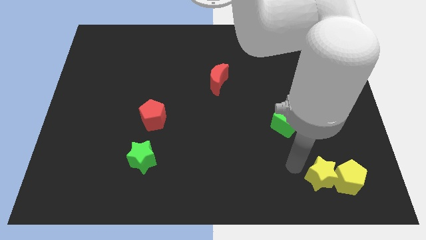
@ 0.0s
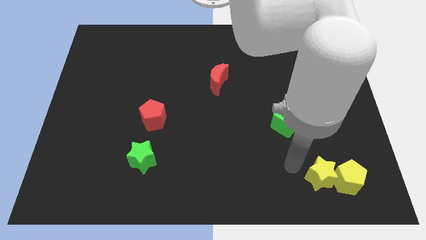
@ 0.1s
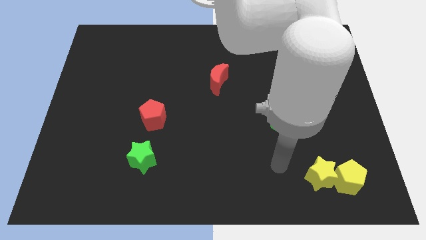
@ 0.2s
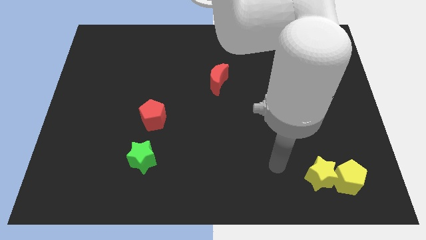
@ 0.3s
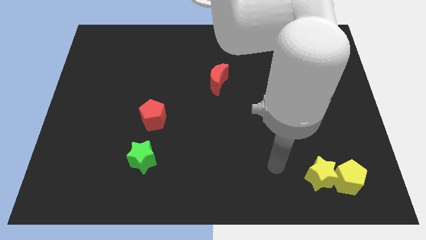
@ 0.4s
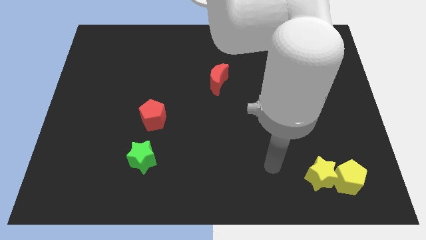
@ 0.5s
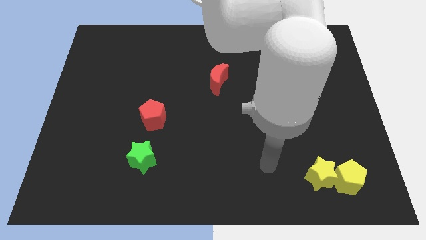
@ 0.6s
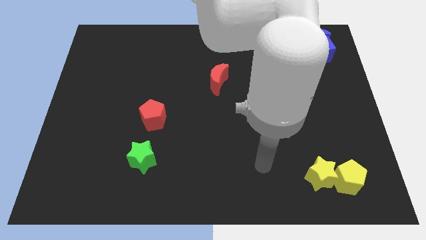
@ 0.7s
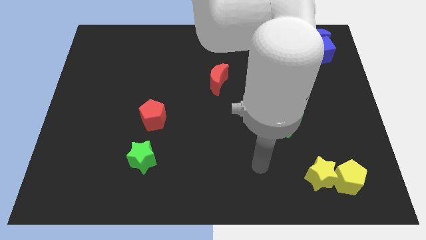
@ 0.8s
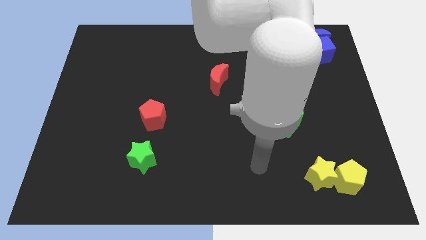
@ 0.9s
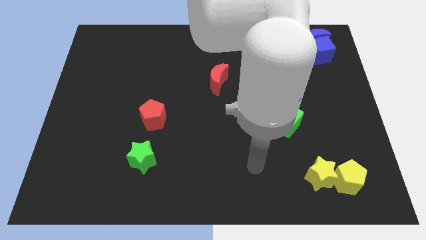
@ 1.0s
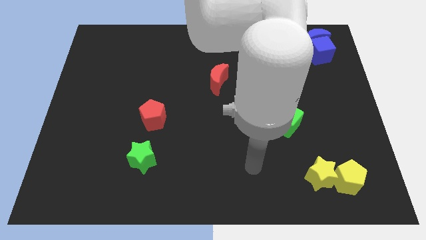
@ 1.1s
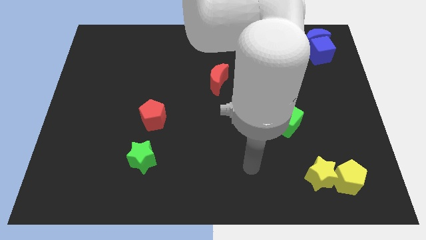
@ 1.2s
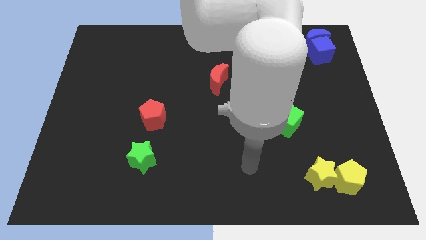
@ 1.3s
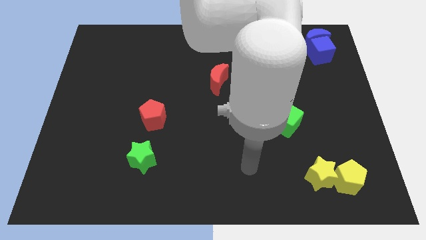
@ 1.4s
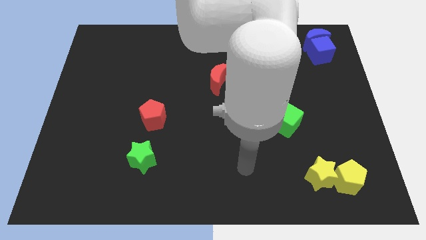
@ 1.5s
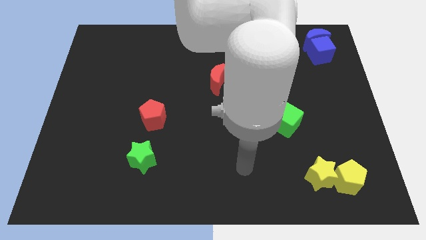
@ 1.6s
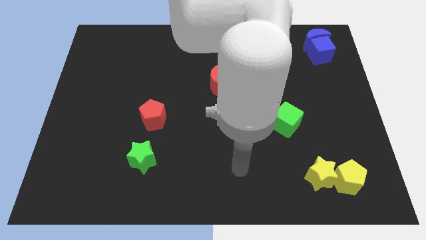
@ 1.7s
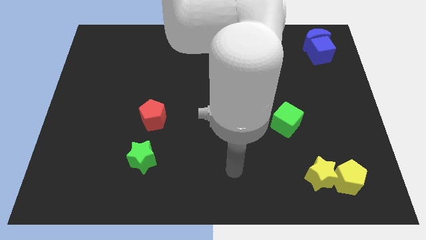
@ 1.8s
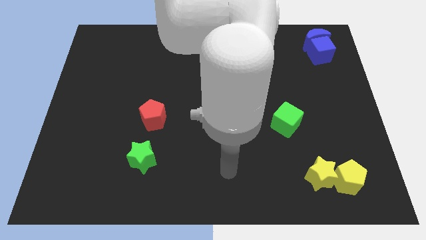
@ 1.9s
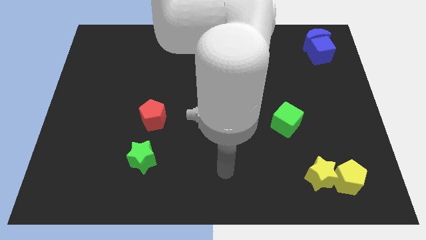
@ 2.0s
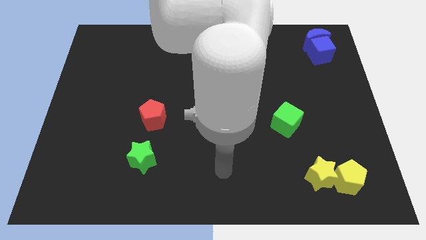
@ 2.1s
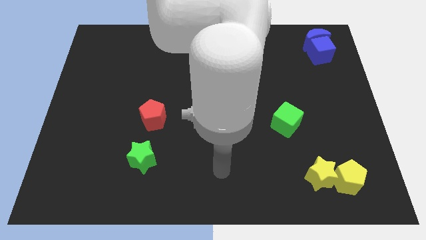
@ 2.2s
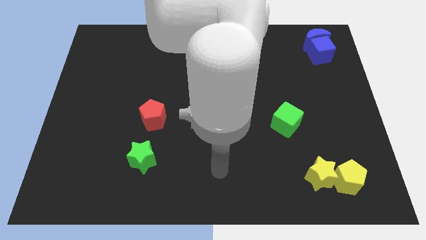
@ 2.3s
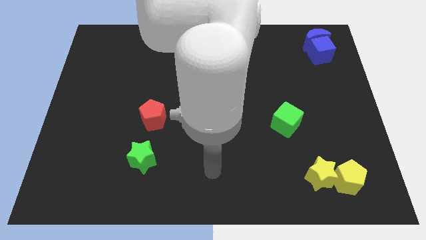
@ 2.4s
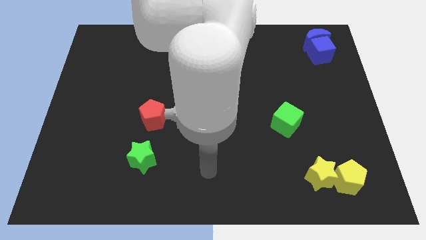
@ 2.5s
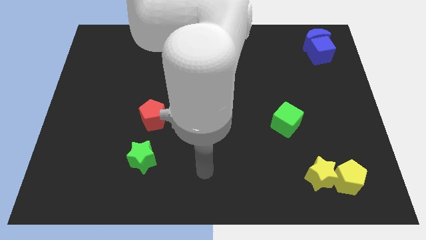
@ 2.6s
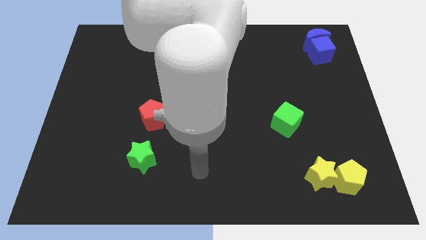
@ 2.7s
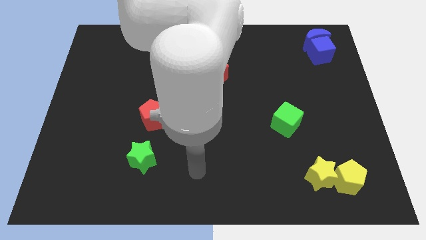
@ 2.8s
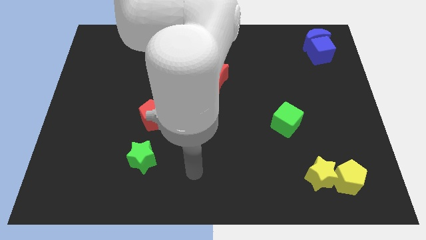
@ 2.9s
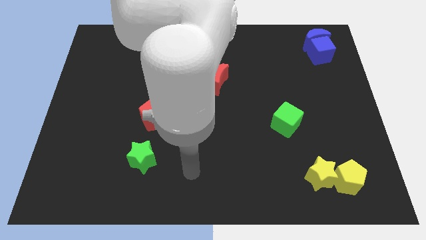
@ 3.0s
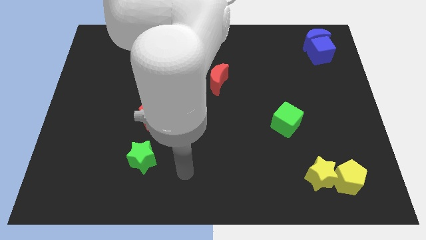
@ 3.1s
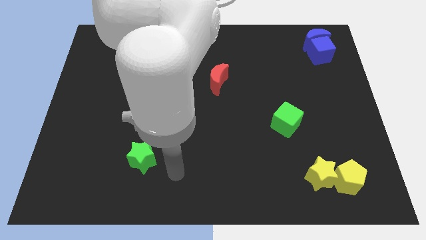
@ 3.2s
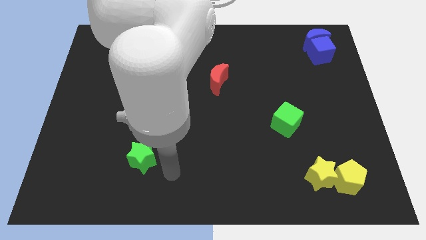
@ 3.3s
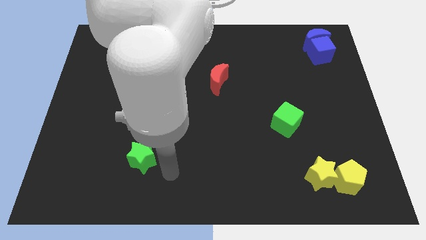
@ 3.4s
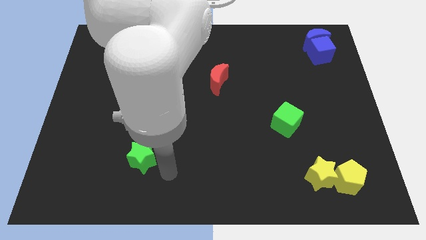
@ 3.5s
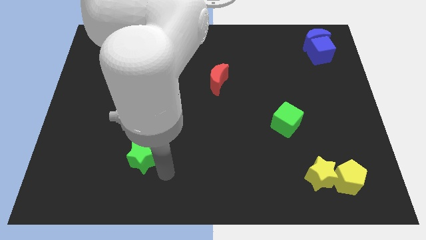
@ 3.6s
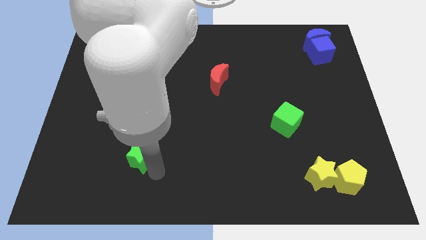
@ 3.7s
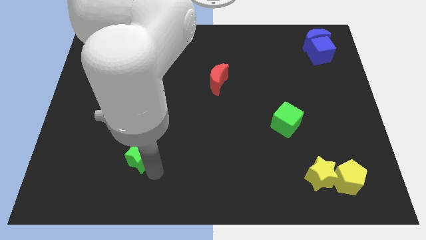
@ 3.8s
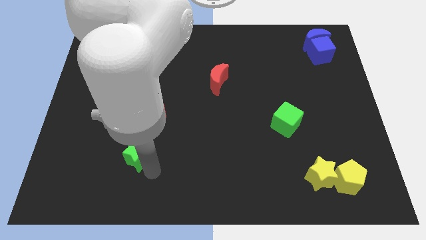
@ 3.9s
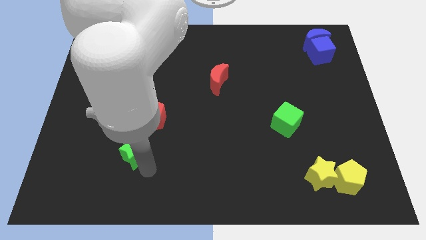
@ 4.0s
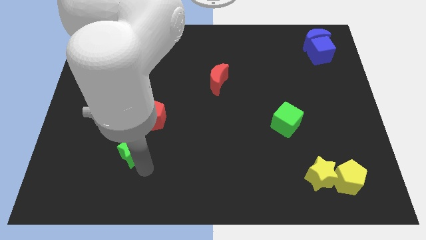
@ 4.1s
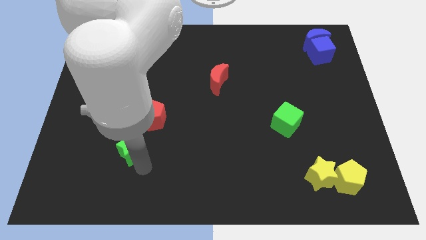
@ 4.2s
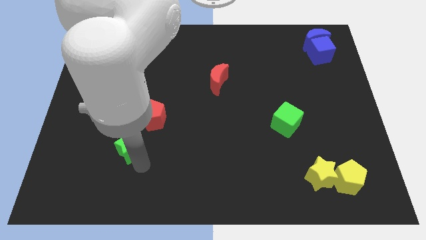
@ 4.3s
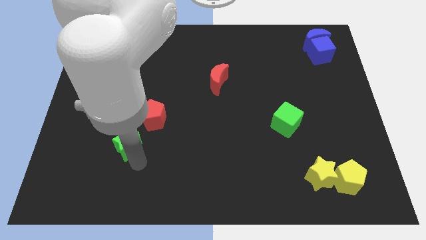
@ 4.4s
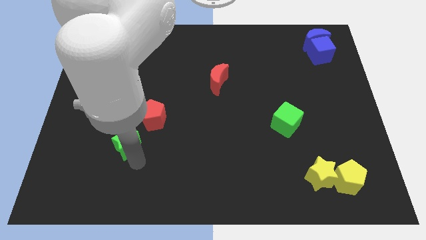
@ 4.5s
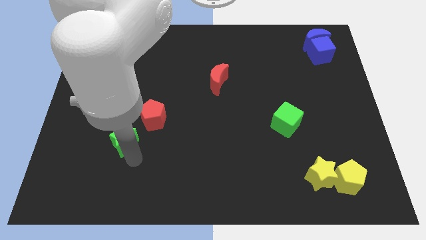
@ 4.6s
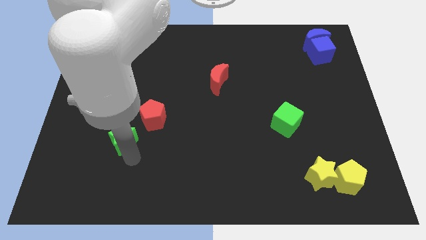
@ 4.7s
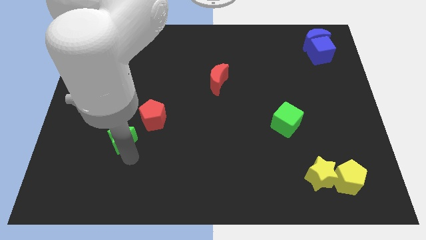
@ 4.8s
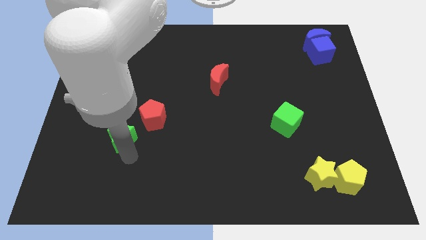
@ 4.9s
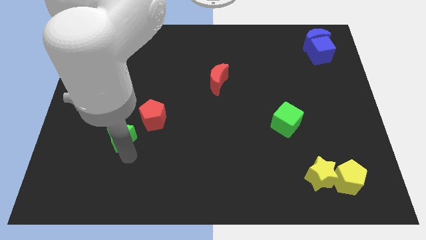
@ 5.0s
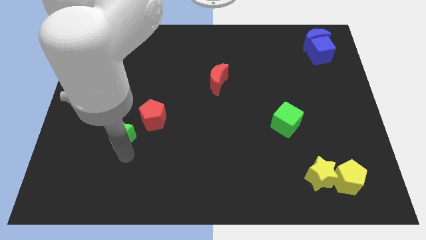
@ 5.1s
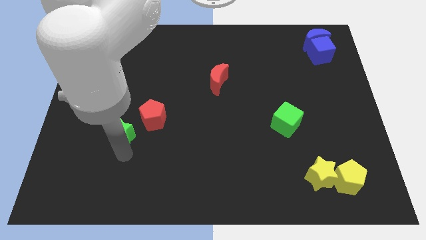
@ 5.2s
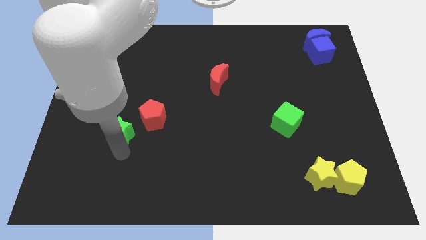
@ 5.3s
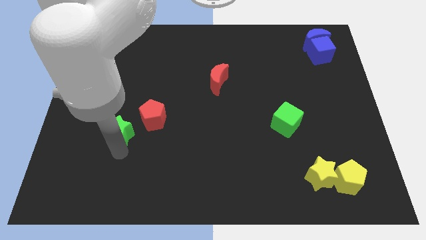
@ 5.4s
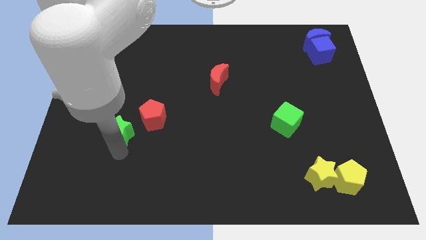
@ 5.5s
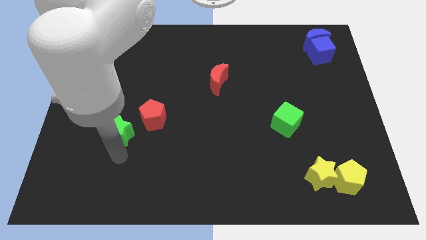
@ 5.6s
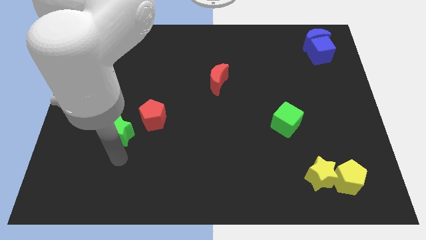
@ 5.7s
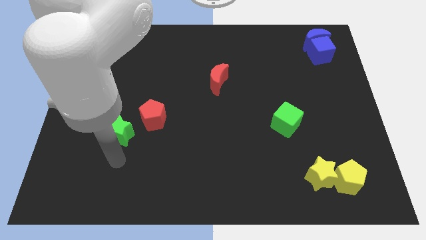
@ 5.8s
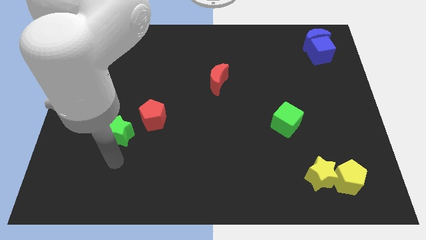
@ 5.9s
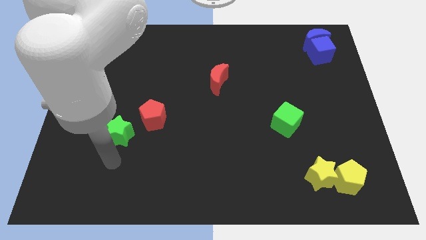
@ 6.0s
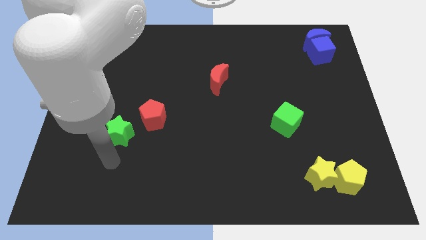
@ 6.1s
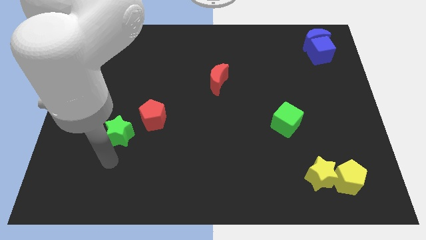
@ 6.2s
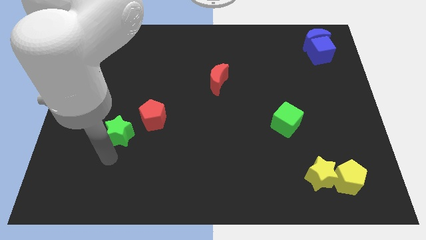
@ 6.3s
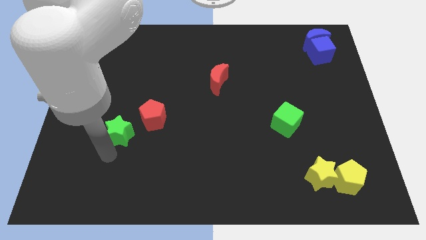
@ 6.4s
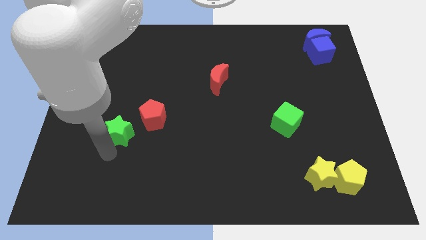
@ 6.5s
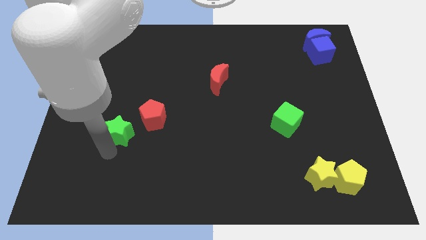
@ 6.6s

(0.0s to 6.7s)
move the green star to the left of the red pentagon

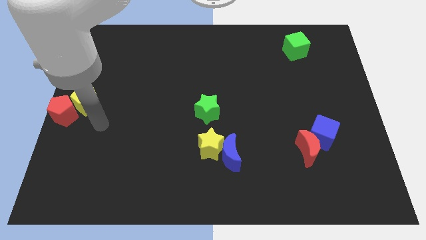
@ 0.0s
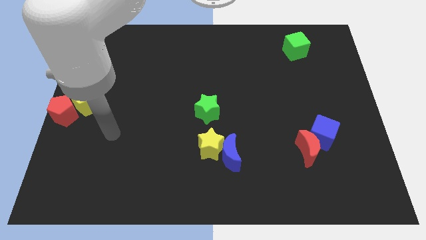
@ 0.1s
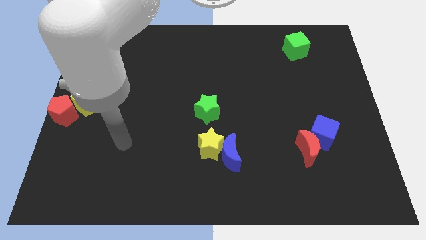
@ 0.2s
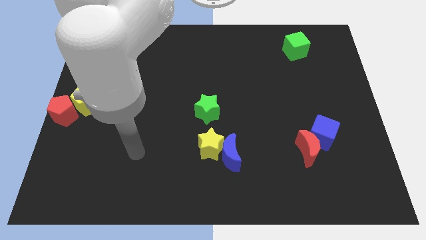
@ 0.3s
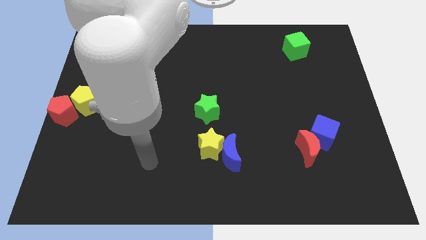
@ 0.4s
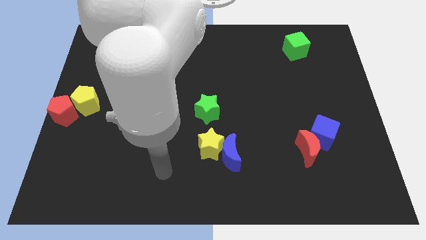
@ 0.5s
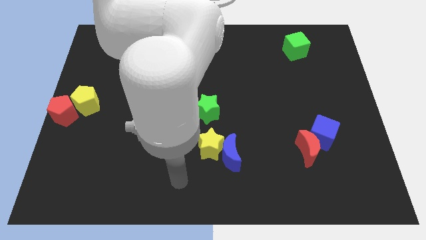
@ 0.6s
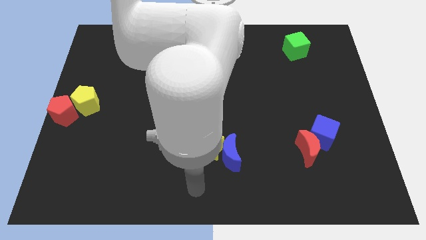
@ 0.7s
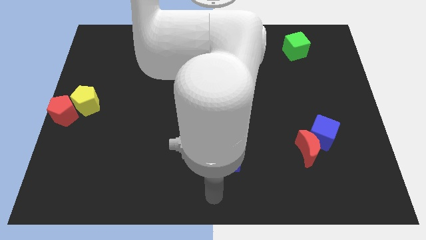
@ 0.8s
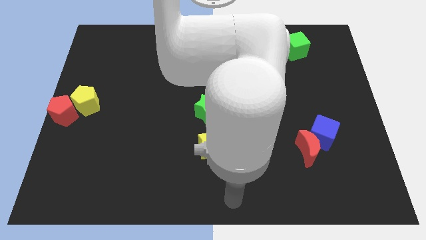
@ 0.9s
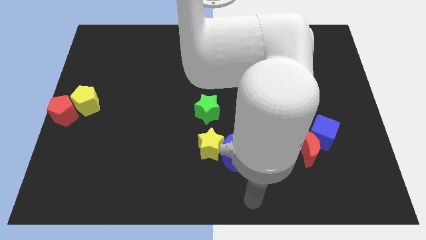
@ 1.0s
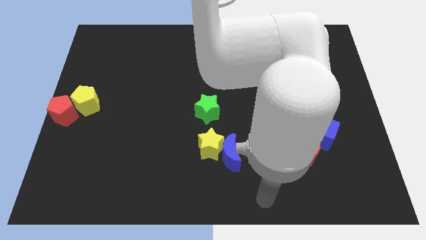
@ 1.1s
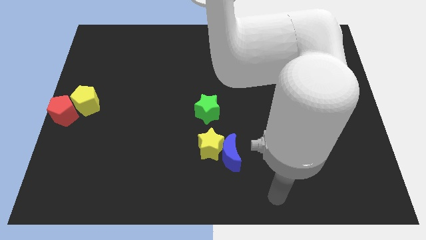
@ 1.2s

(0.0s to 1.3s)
move your arm away from the yellow pentagon

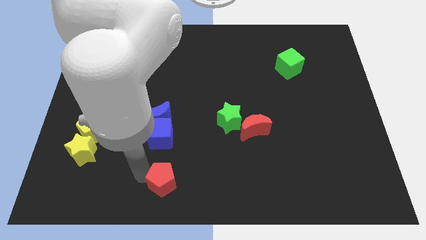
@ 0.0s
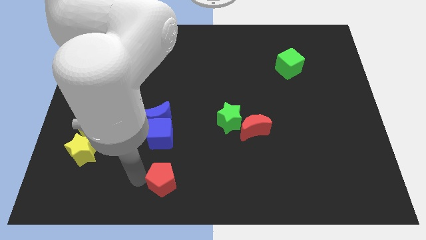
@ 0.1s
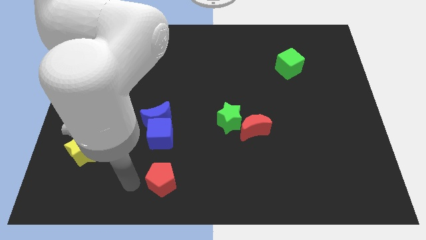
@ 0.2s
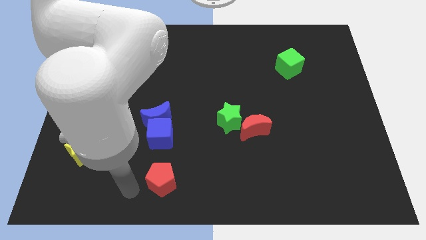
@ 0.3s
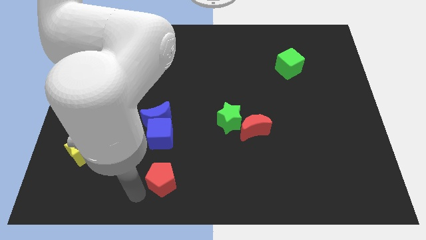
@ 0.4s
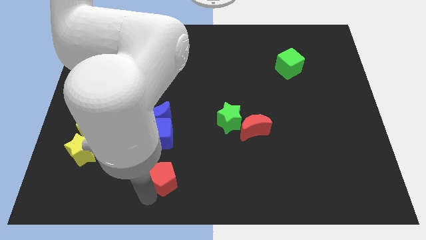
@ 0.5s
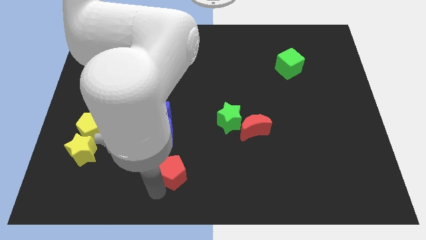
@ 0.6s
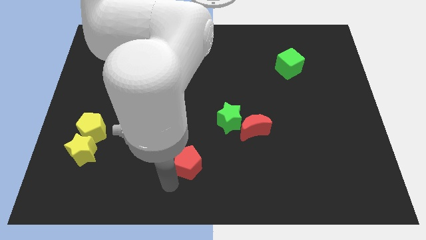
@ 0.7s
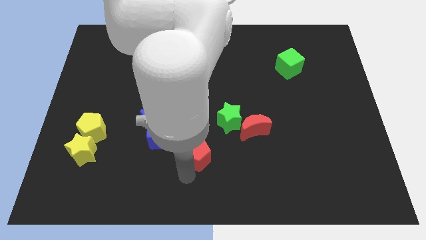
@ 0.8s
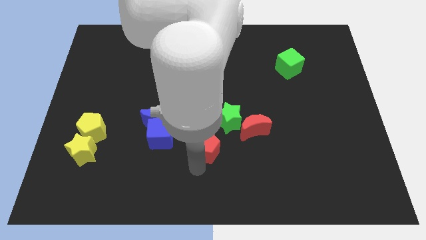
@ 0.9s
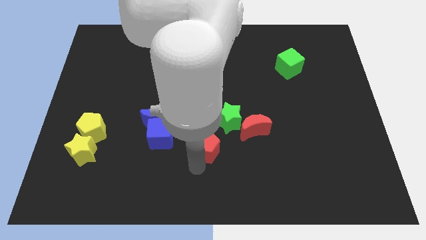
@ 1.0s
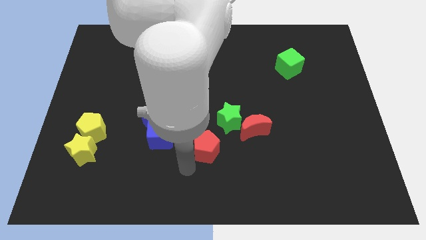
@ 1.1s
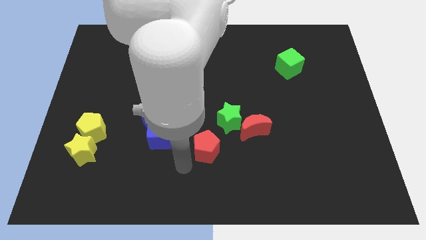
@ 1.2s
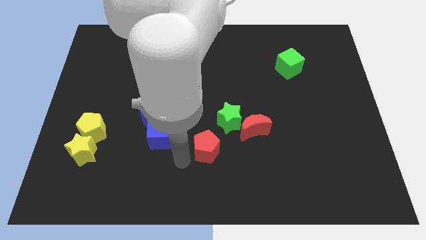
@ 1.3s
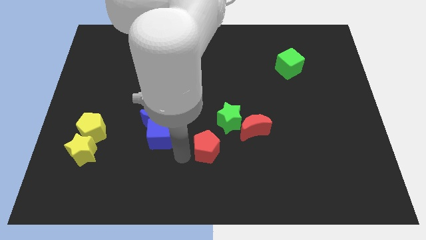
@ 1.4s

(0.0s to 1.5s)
push the red pentagon close to the green star
